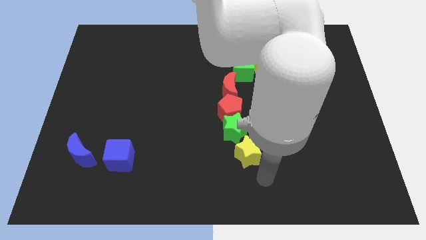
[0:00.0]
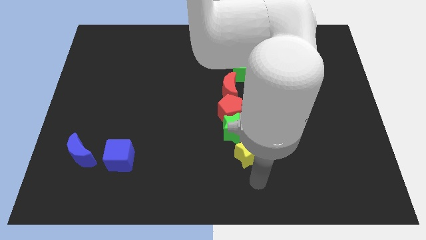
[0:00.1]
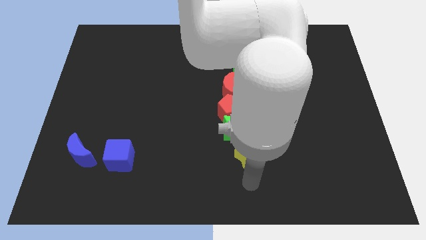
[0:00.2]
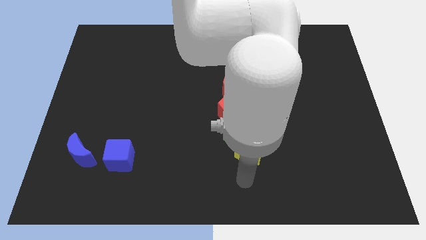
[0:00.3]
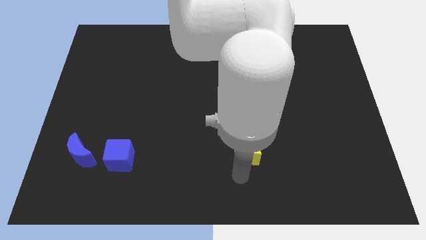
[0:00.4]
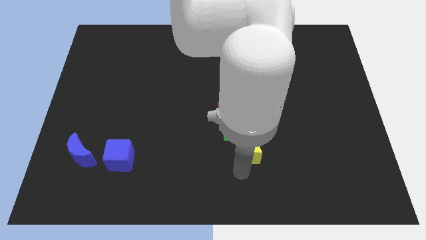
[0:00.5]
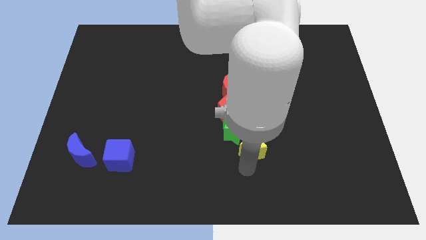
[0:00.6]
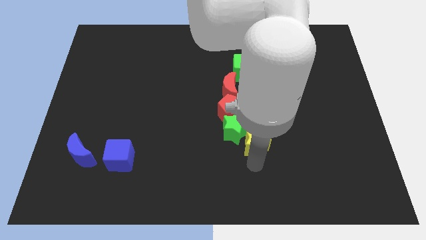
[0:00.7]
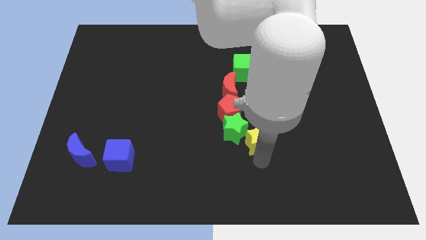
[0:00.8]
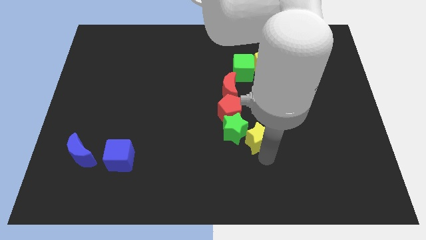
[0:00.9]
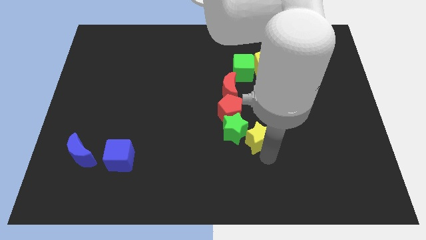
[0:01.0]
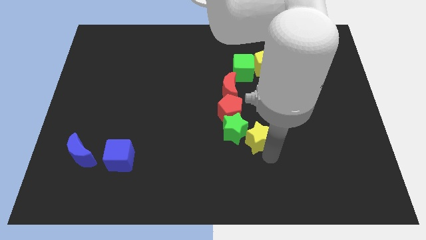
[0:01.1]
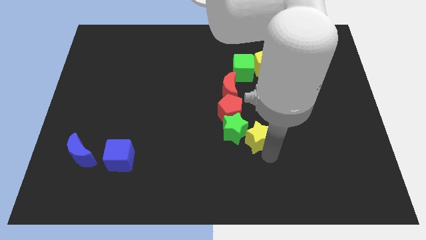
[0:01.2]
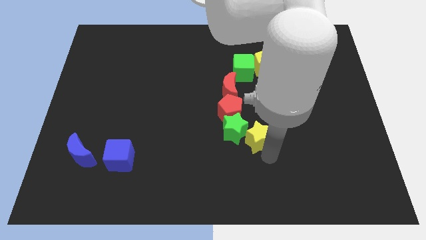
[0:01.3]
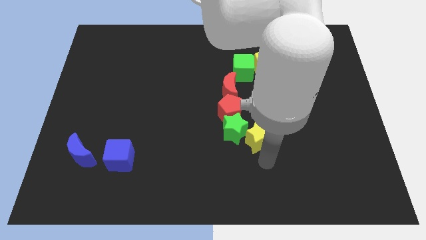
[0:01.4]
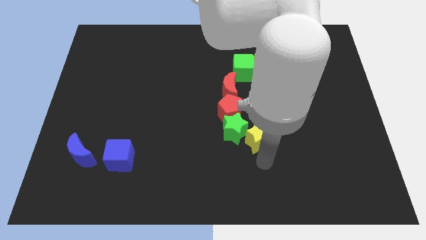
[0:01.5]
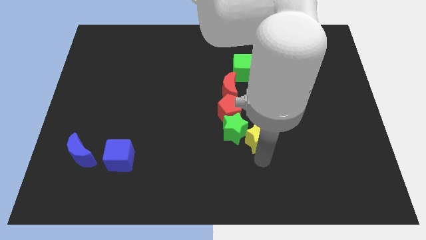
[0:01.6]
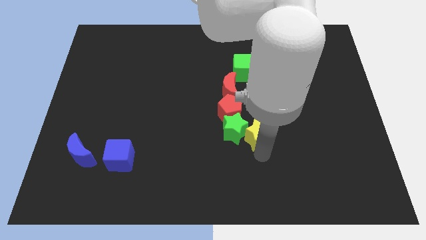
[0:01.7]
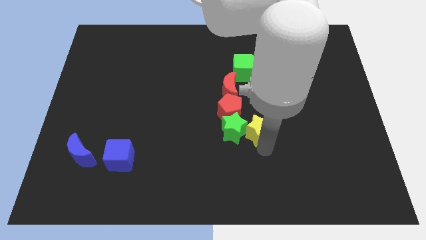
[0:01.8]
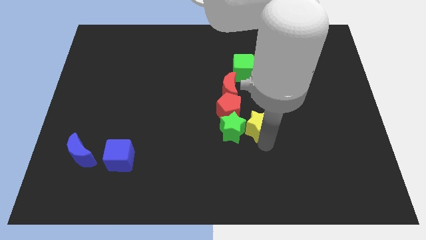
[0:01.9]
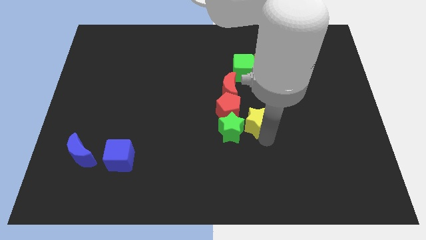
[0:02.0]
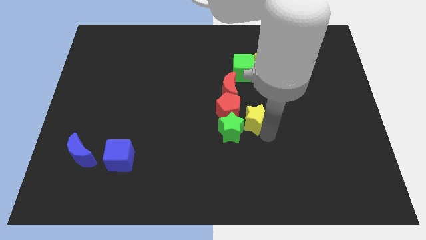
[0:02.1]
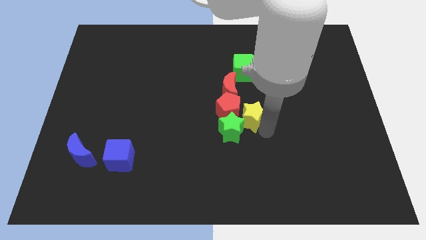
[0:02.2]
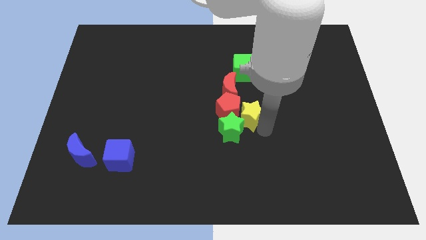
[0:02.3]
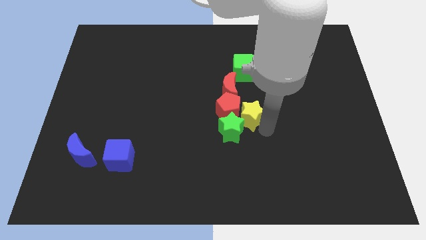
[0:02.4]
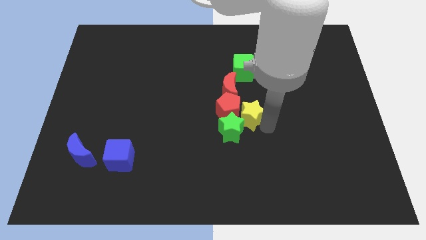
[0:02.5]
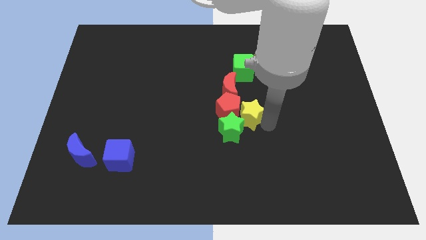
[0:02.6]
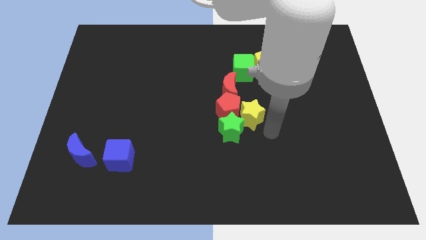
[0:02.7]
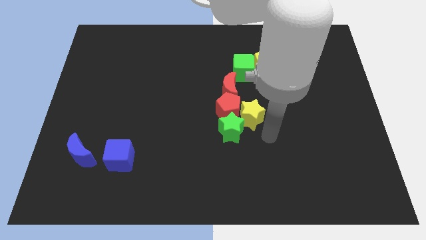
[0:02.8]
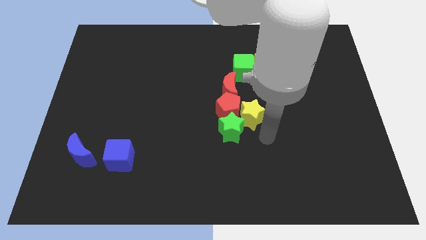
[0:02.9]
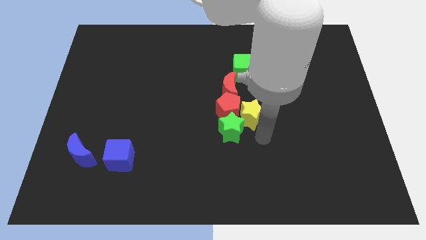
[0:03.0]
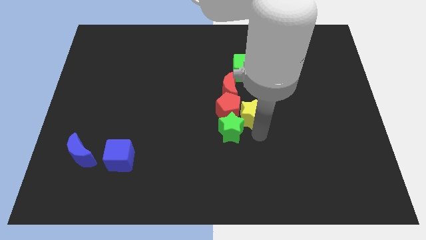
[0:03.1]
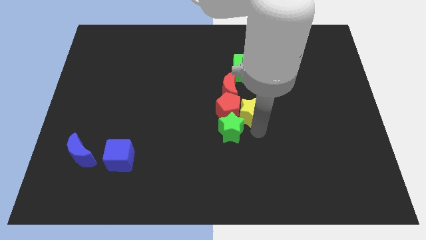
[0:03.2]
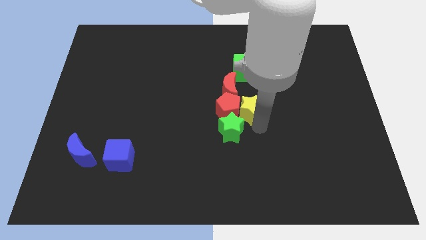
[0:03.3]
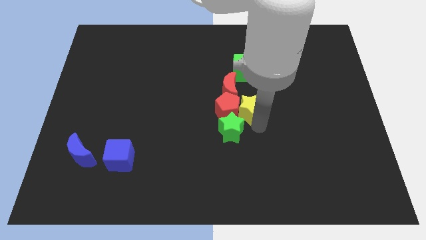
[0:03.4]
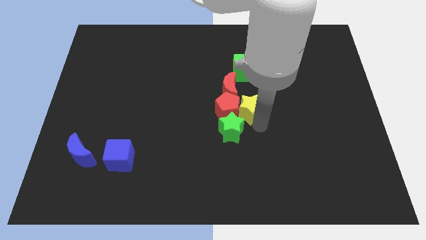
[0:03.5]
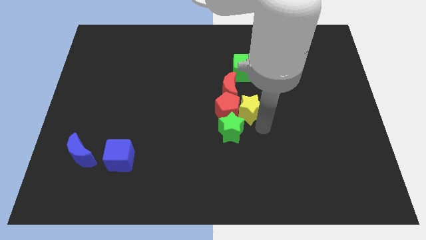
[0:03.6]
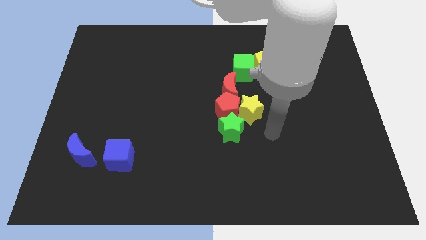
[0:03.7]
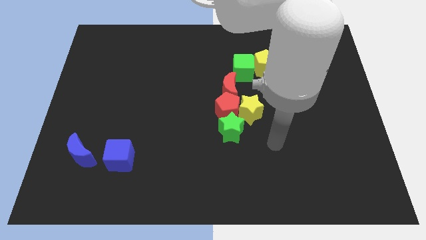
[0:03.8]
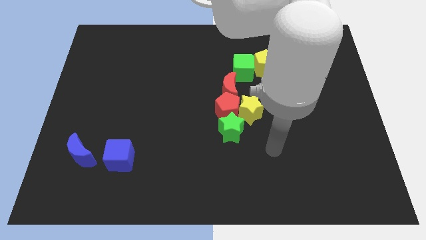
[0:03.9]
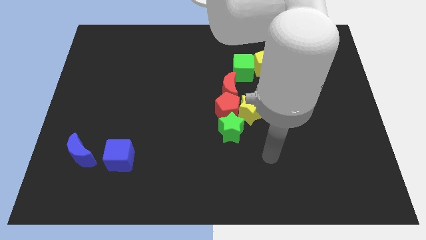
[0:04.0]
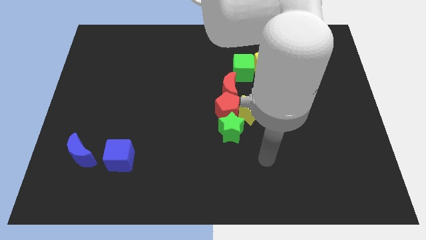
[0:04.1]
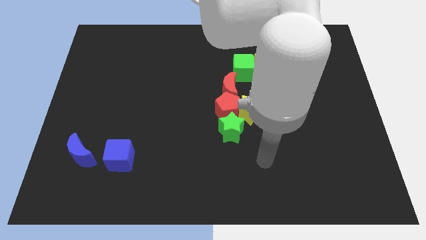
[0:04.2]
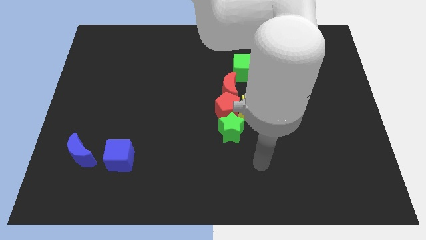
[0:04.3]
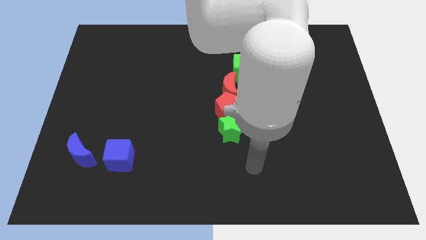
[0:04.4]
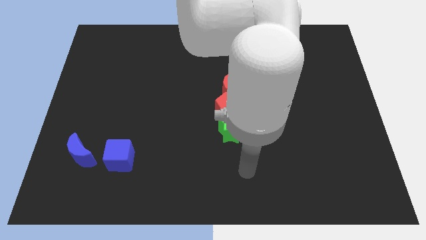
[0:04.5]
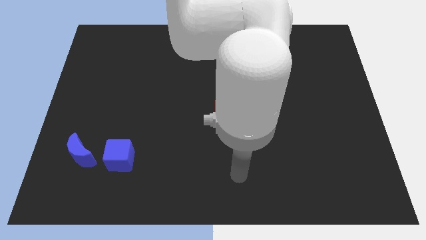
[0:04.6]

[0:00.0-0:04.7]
move the yellow star towards the right of red pentagon

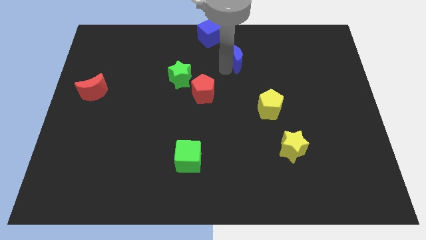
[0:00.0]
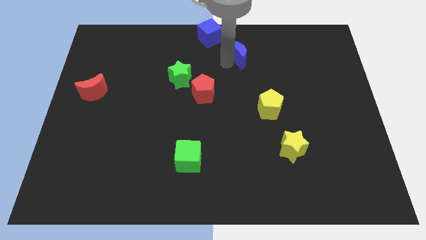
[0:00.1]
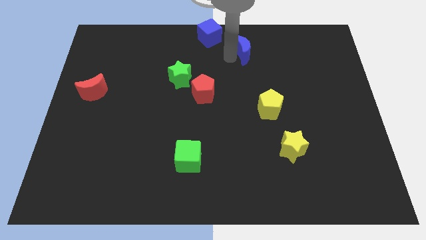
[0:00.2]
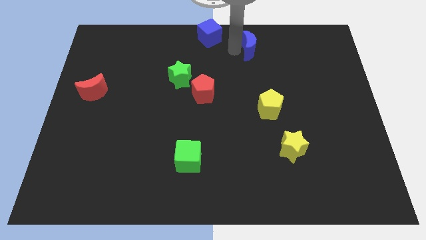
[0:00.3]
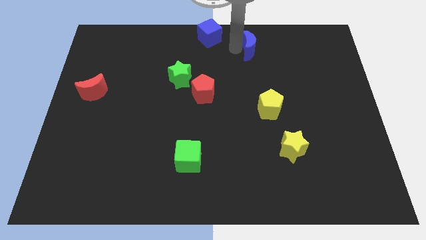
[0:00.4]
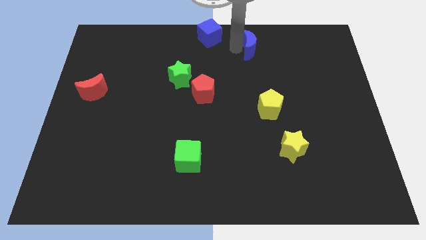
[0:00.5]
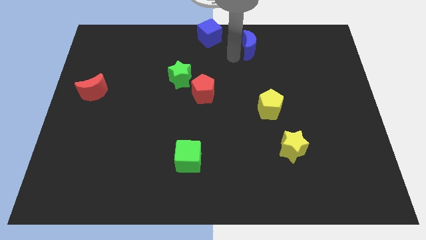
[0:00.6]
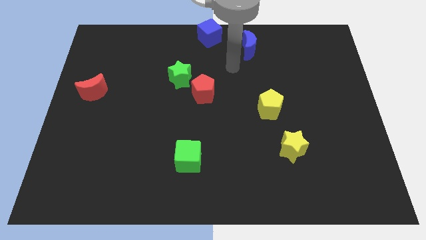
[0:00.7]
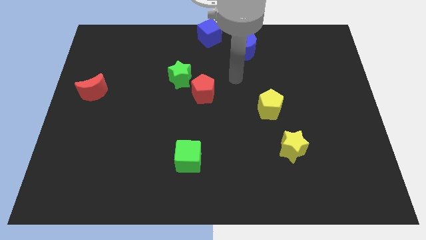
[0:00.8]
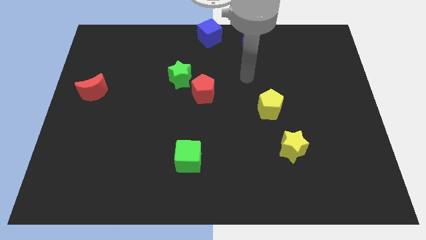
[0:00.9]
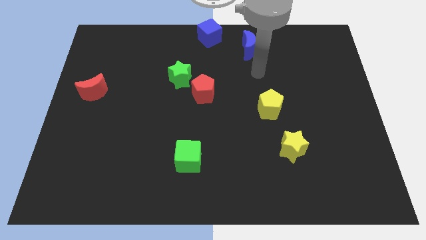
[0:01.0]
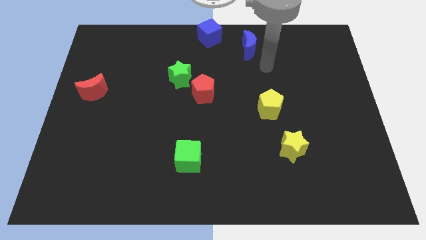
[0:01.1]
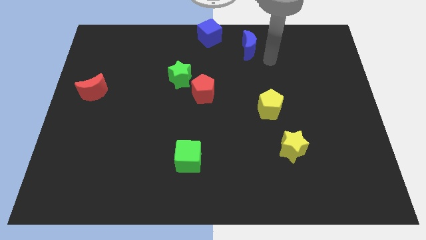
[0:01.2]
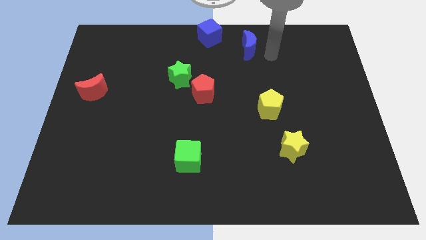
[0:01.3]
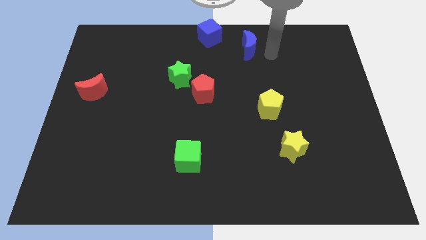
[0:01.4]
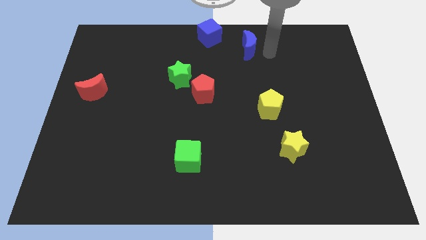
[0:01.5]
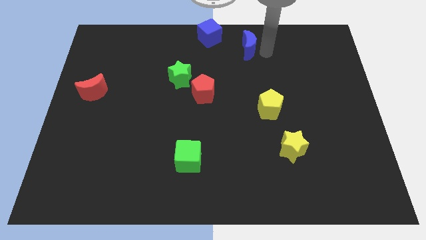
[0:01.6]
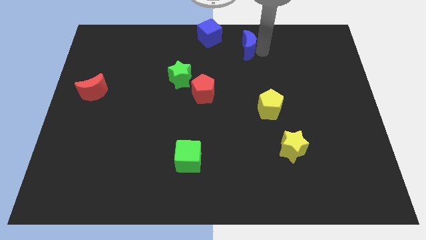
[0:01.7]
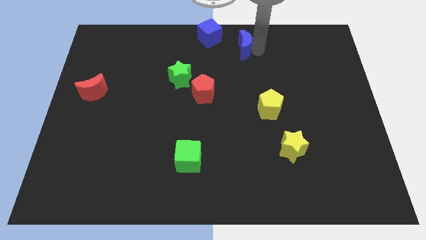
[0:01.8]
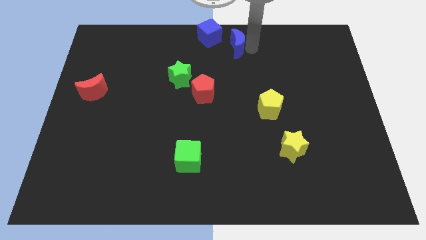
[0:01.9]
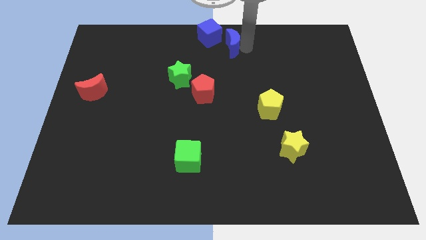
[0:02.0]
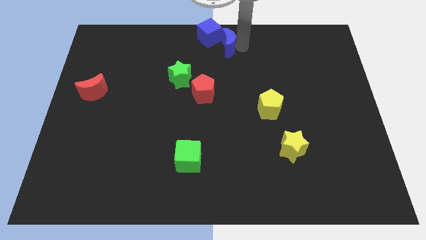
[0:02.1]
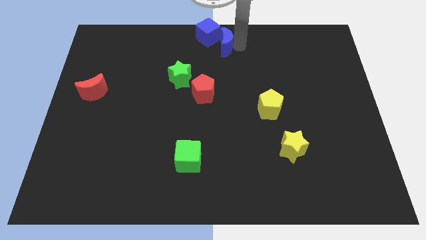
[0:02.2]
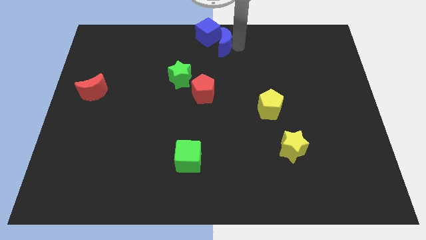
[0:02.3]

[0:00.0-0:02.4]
move blue moon into the blue cube

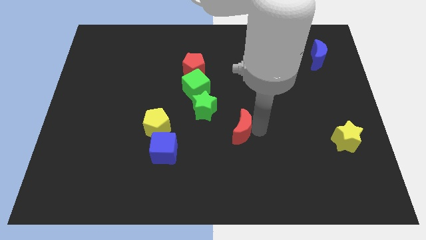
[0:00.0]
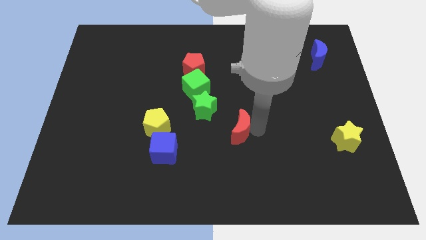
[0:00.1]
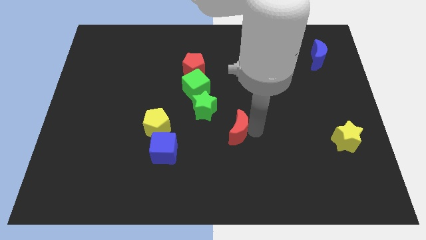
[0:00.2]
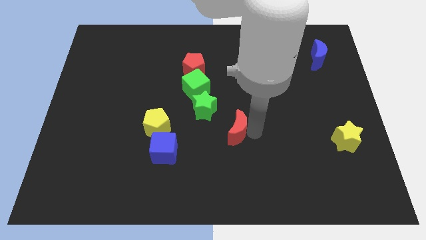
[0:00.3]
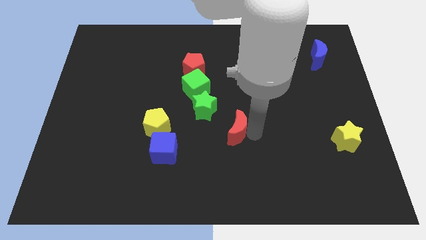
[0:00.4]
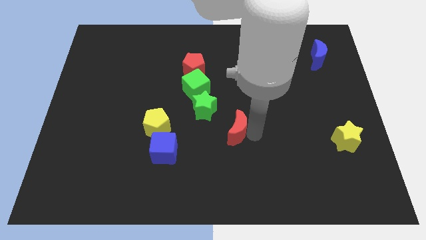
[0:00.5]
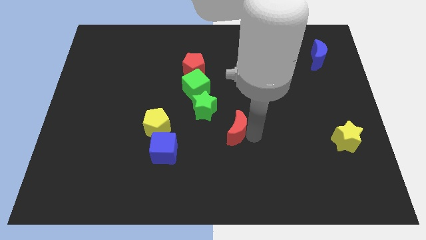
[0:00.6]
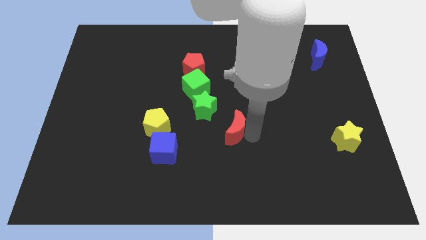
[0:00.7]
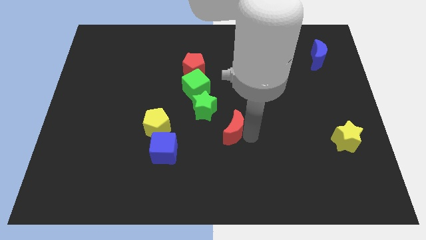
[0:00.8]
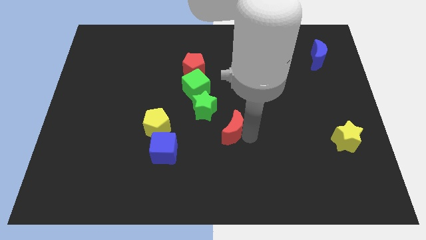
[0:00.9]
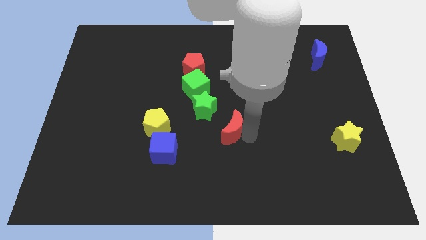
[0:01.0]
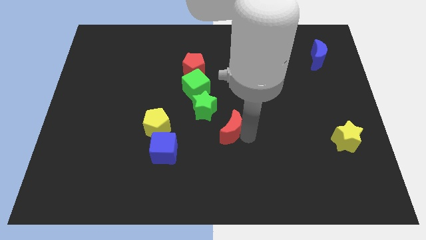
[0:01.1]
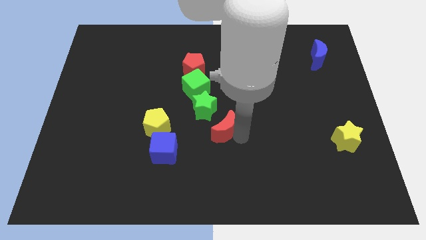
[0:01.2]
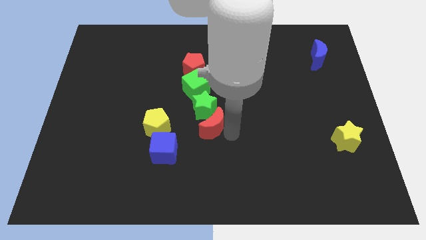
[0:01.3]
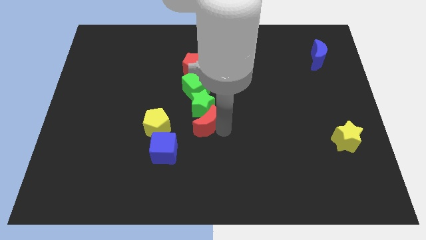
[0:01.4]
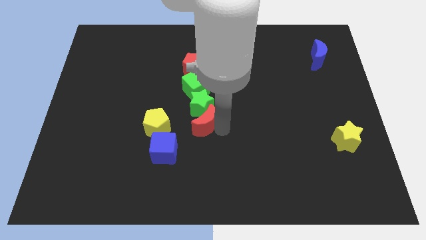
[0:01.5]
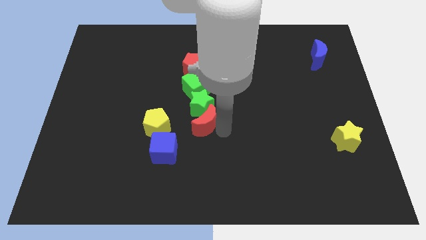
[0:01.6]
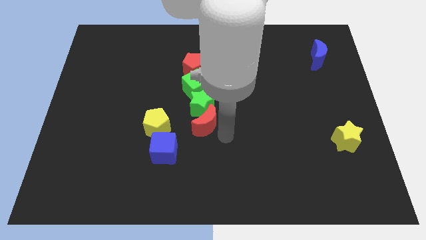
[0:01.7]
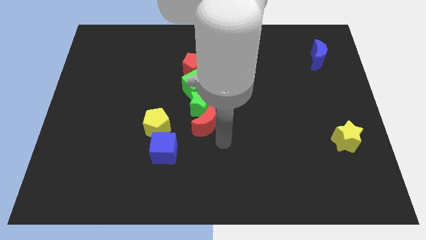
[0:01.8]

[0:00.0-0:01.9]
place the red moon at the bottom of the green star
